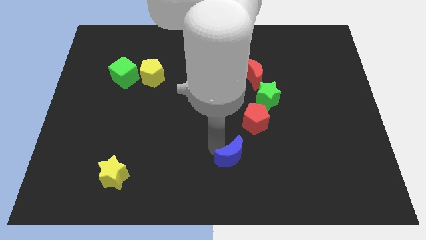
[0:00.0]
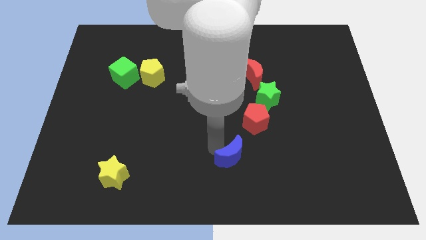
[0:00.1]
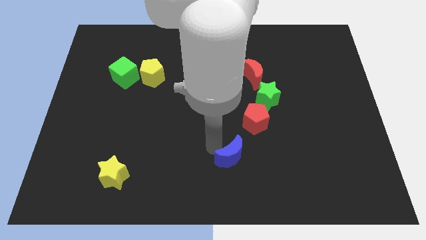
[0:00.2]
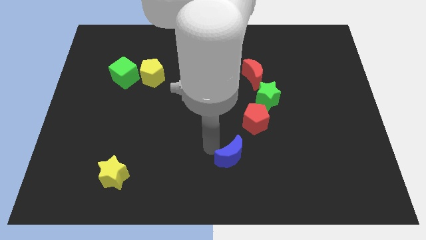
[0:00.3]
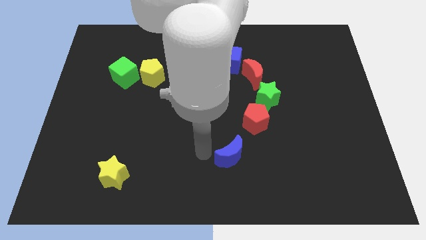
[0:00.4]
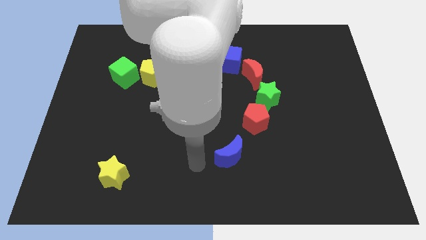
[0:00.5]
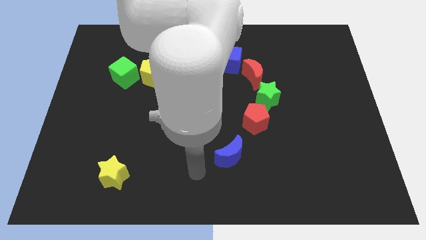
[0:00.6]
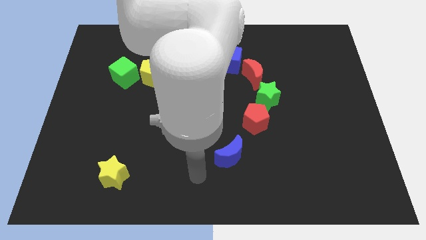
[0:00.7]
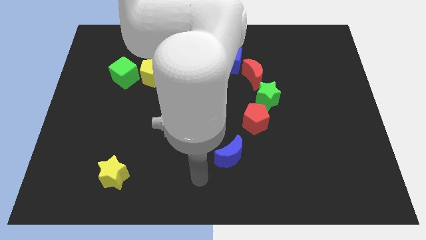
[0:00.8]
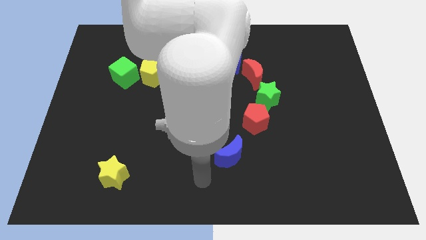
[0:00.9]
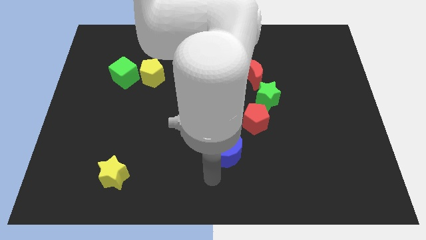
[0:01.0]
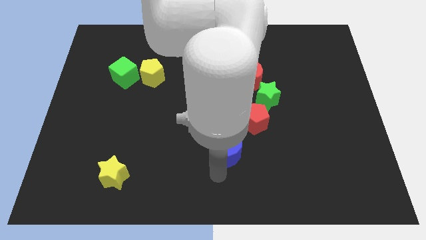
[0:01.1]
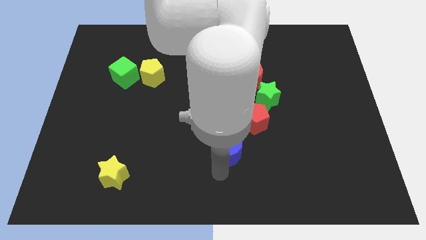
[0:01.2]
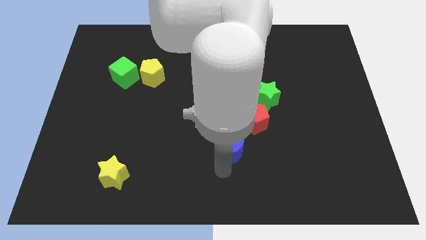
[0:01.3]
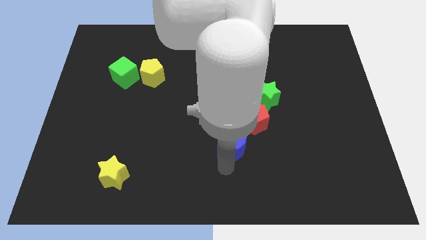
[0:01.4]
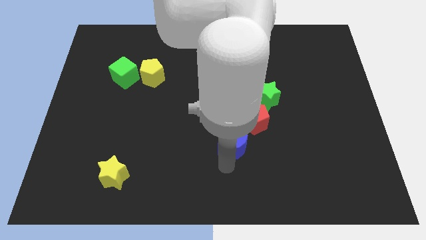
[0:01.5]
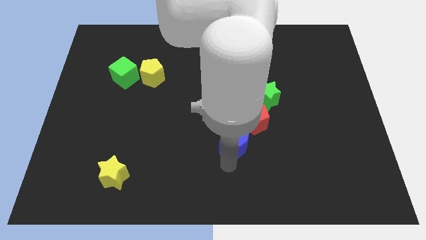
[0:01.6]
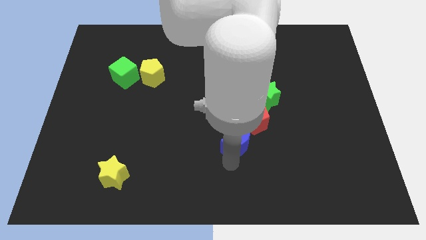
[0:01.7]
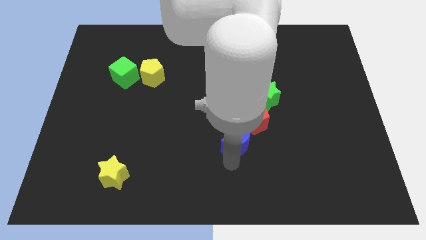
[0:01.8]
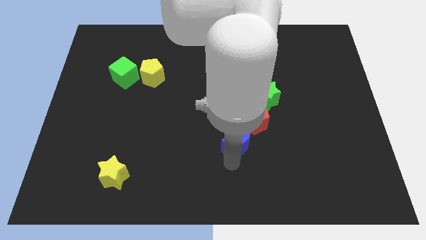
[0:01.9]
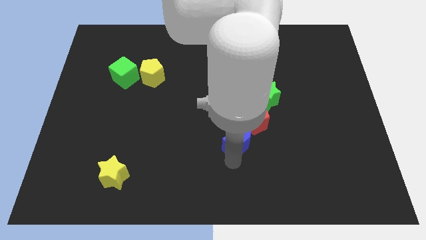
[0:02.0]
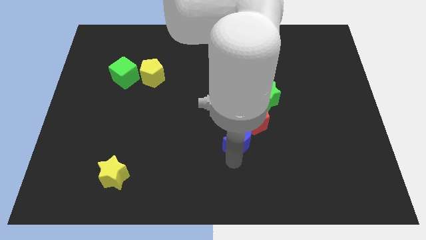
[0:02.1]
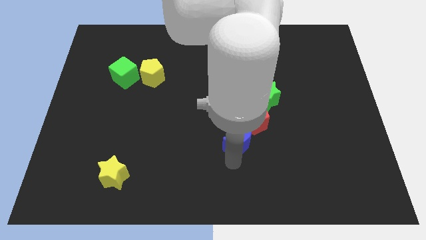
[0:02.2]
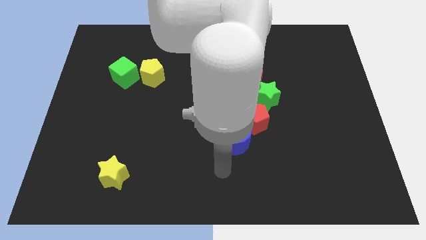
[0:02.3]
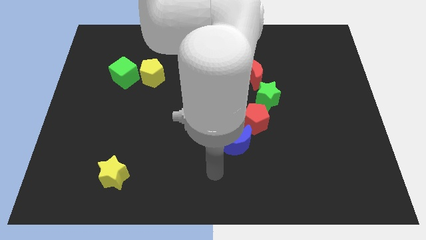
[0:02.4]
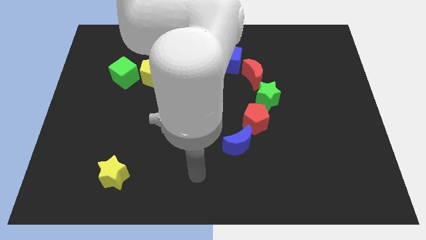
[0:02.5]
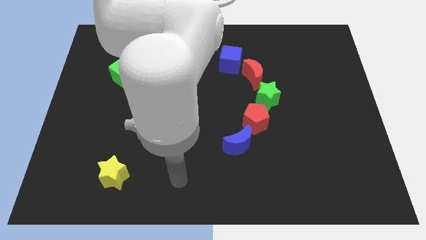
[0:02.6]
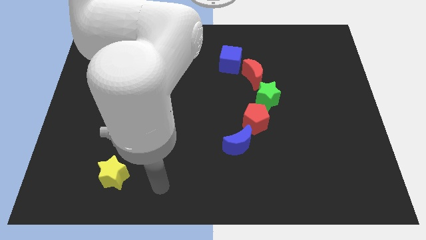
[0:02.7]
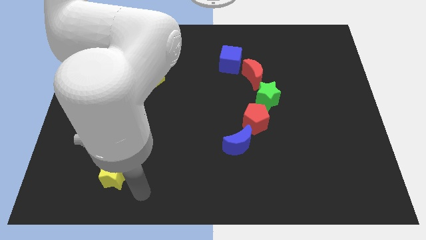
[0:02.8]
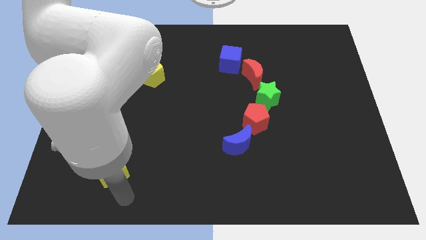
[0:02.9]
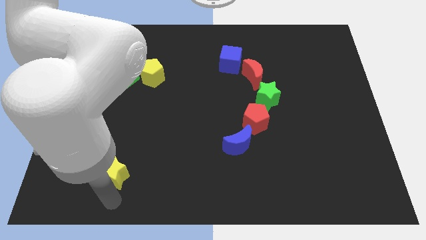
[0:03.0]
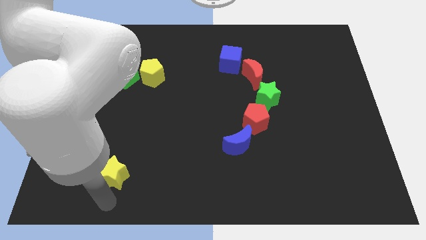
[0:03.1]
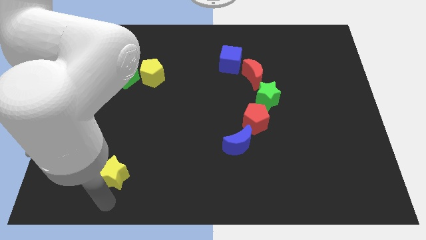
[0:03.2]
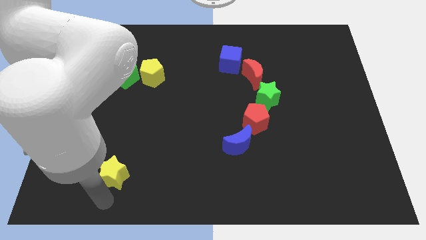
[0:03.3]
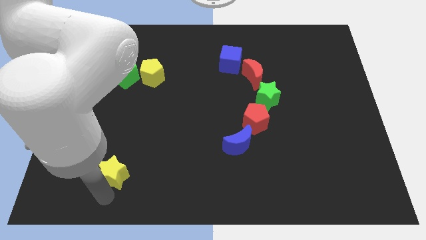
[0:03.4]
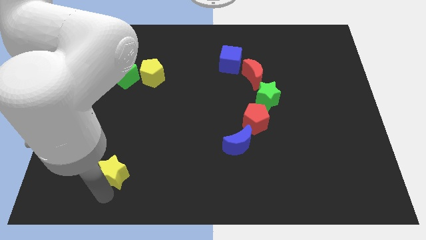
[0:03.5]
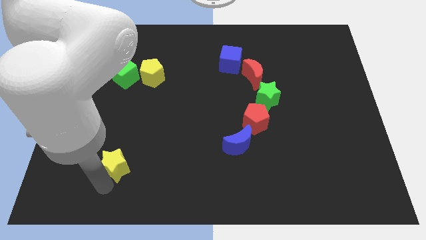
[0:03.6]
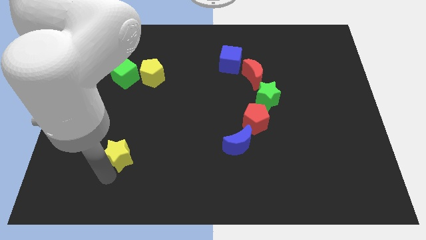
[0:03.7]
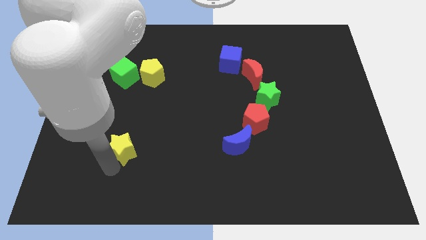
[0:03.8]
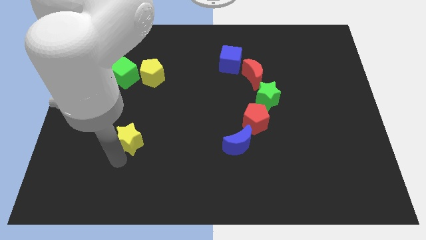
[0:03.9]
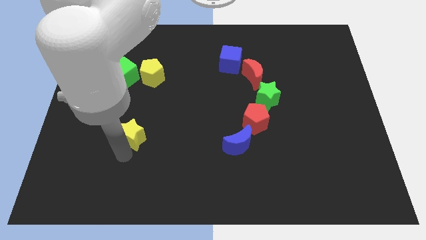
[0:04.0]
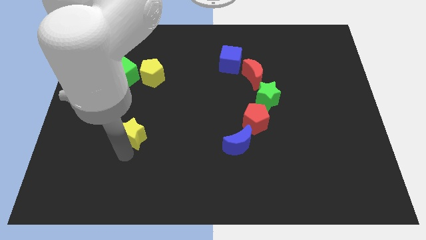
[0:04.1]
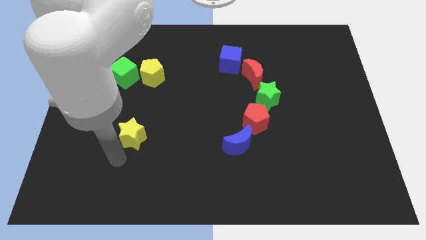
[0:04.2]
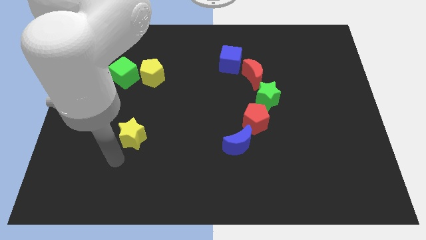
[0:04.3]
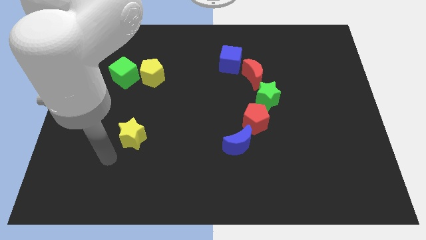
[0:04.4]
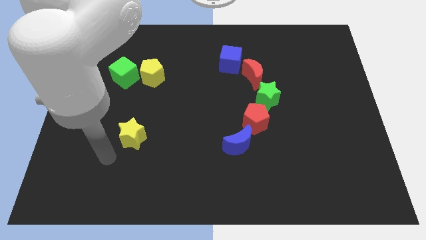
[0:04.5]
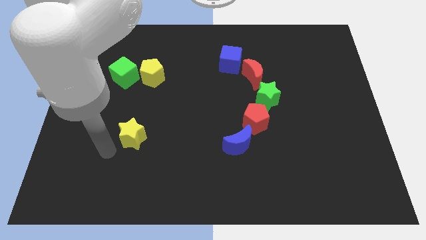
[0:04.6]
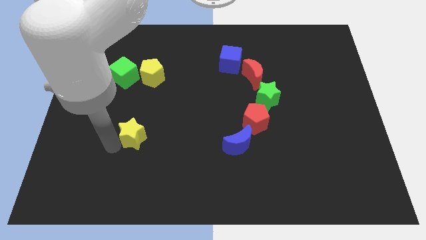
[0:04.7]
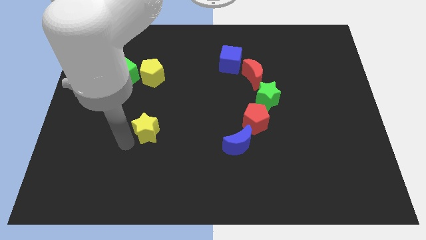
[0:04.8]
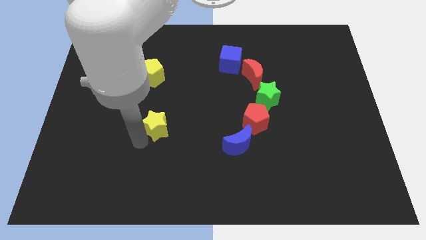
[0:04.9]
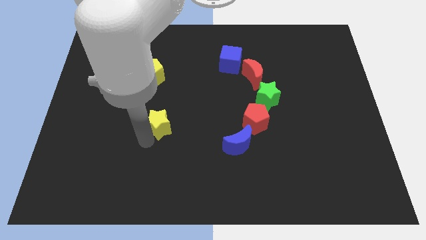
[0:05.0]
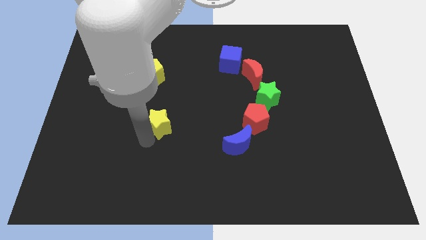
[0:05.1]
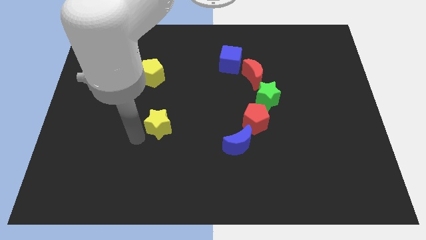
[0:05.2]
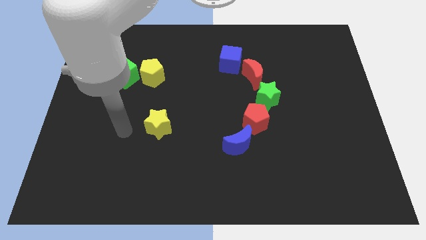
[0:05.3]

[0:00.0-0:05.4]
place the blue moon to bottom of red pentagon

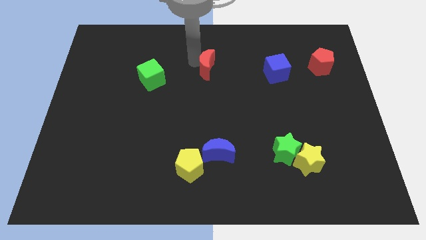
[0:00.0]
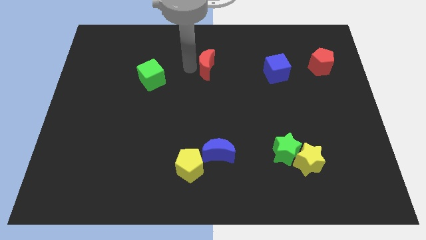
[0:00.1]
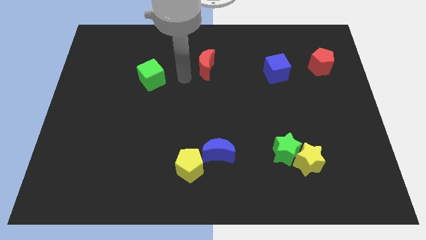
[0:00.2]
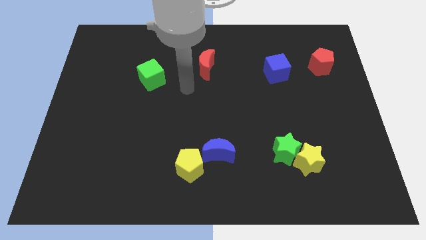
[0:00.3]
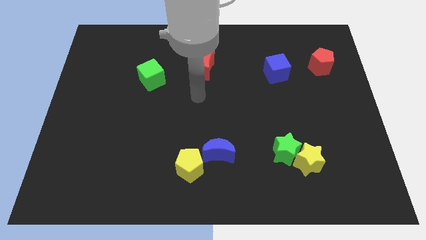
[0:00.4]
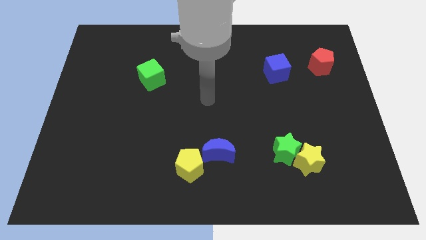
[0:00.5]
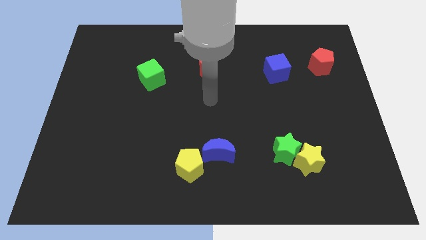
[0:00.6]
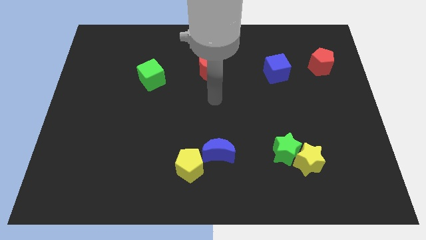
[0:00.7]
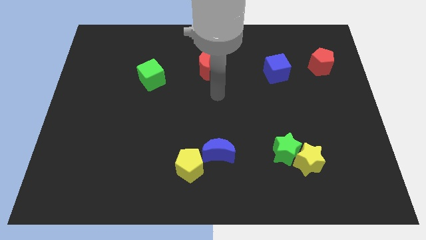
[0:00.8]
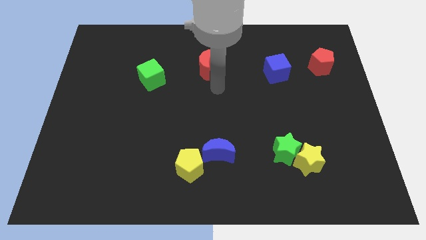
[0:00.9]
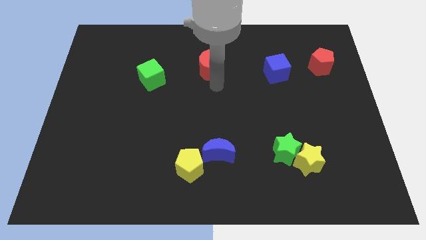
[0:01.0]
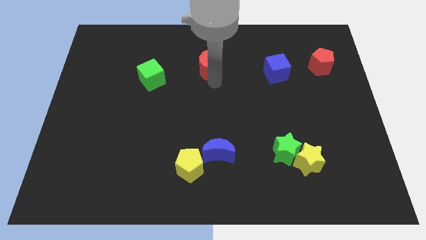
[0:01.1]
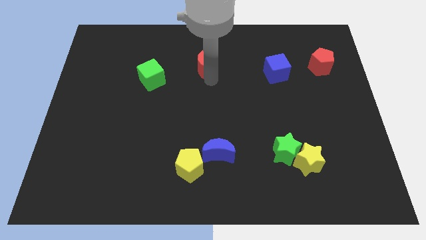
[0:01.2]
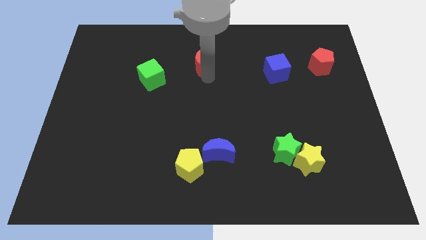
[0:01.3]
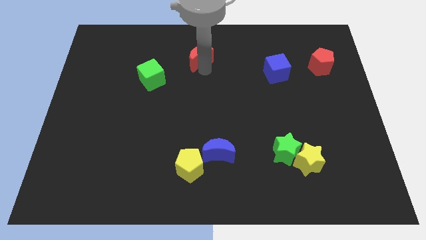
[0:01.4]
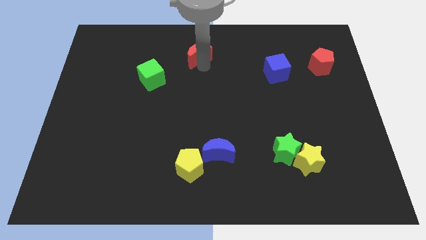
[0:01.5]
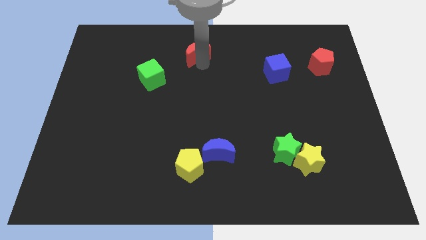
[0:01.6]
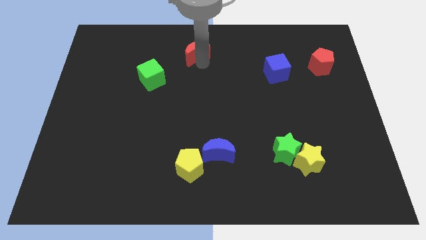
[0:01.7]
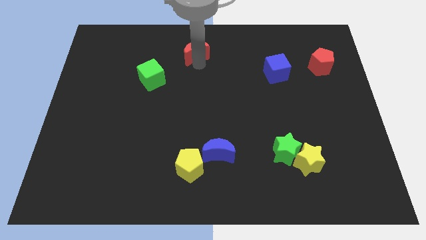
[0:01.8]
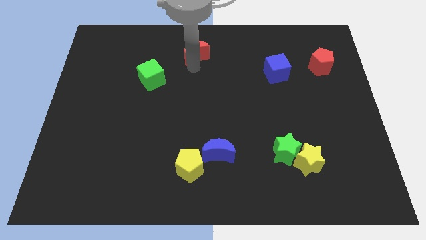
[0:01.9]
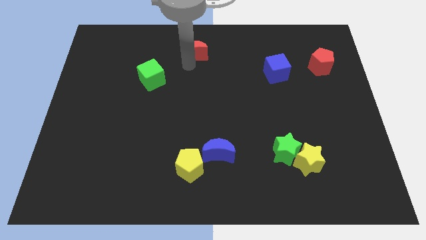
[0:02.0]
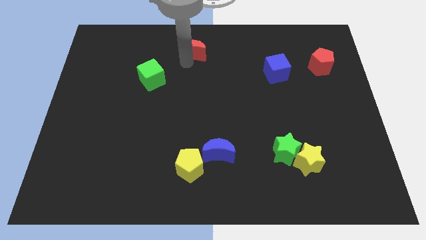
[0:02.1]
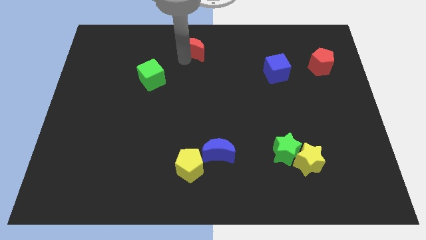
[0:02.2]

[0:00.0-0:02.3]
move the red crescent to the top right of the green cube

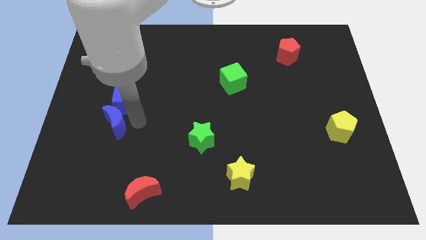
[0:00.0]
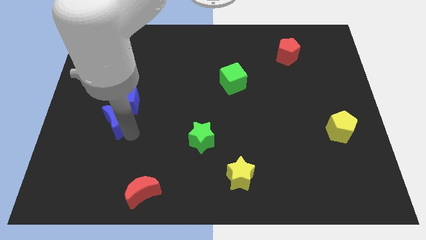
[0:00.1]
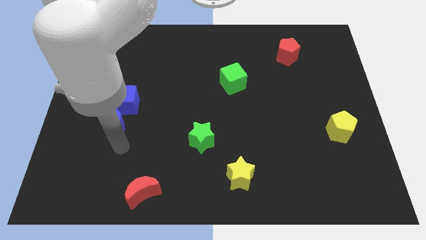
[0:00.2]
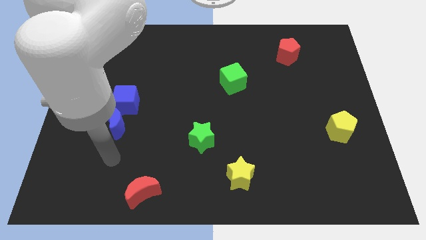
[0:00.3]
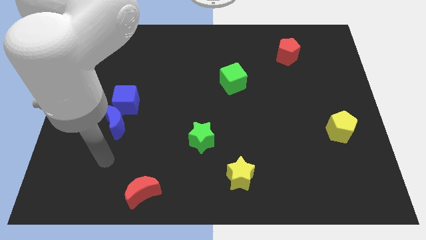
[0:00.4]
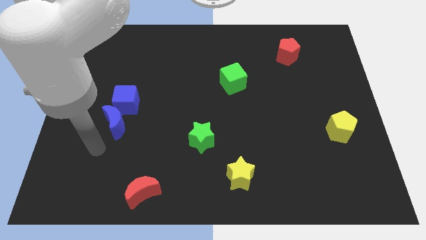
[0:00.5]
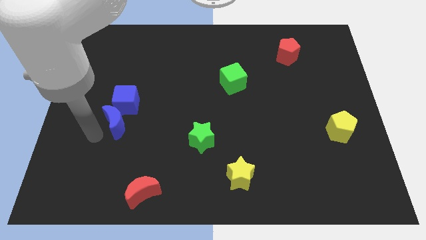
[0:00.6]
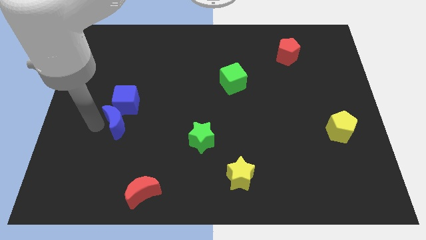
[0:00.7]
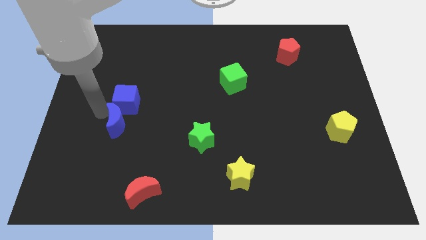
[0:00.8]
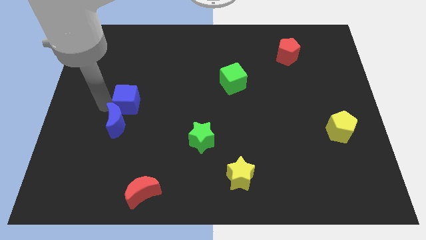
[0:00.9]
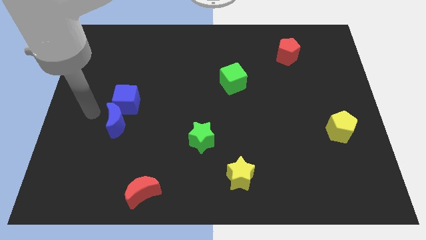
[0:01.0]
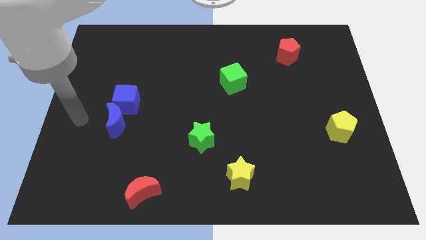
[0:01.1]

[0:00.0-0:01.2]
place your arm left to blue moon

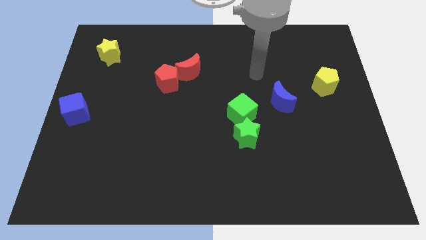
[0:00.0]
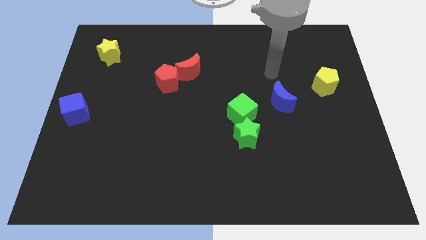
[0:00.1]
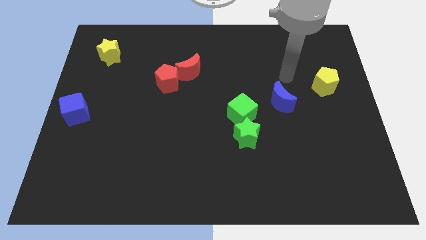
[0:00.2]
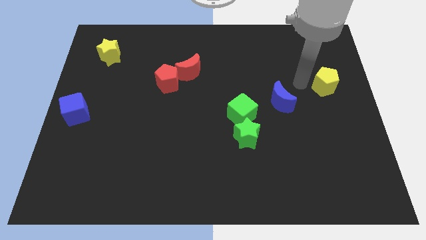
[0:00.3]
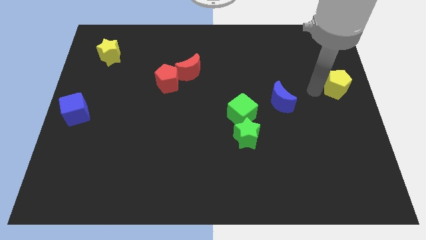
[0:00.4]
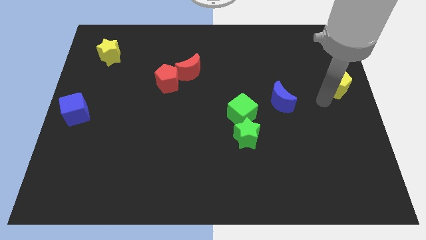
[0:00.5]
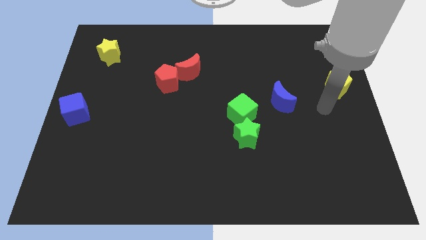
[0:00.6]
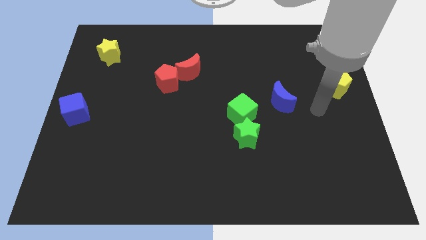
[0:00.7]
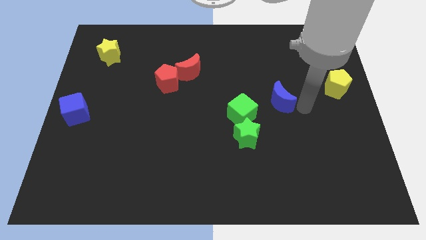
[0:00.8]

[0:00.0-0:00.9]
push yellow pentagon towards right of the board
